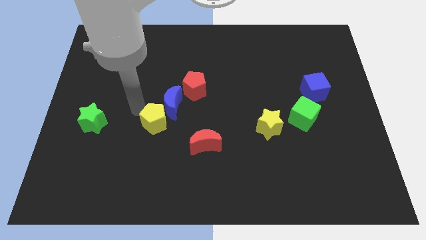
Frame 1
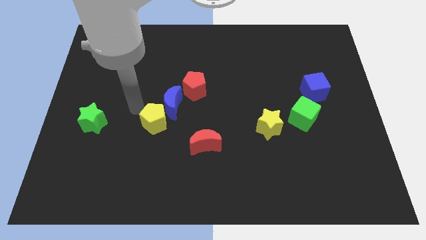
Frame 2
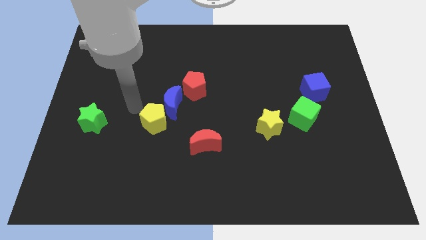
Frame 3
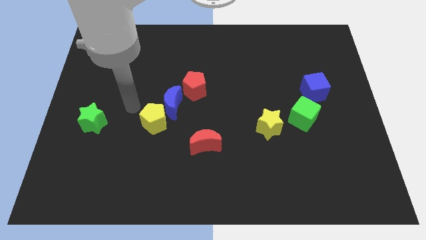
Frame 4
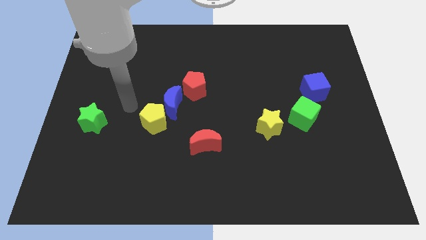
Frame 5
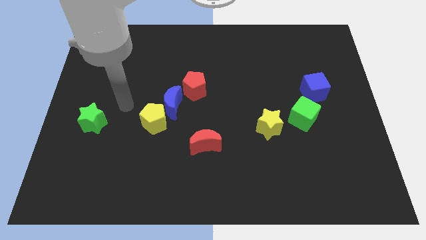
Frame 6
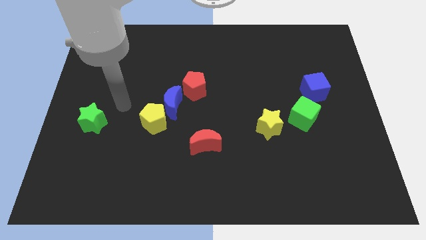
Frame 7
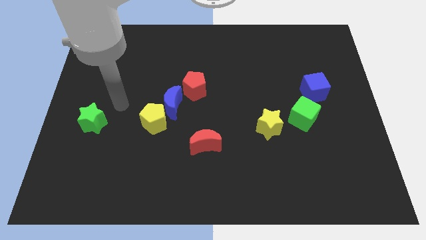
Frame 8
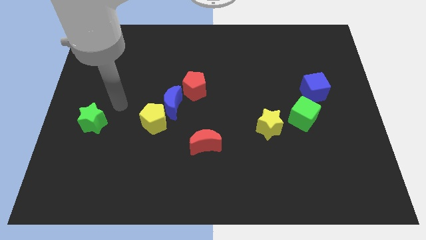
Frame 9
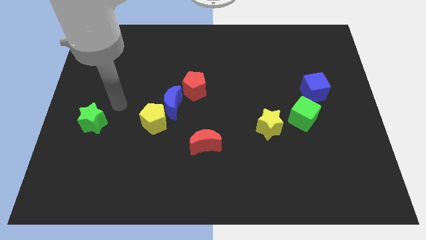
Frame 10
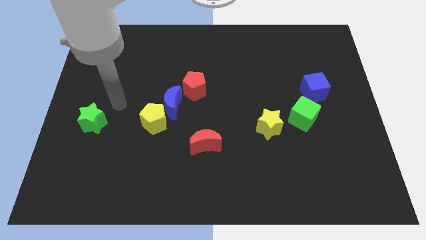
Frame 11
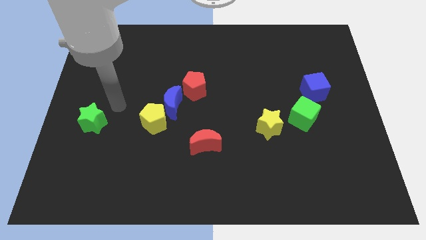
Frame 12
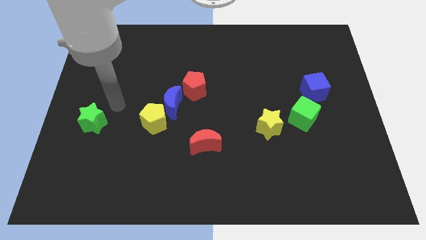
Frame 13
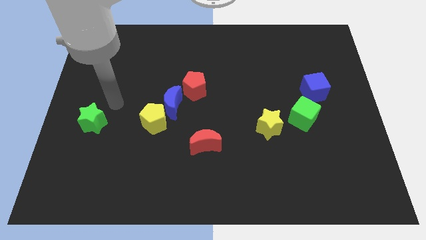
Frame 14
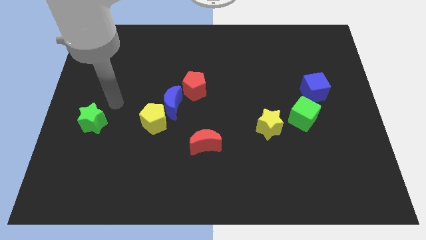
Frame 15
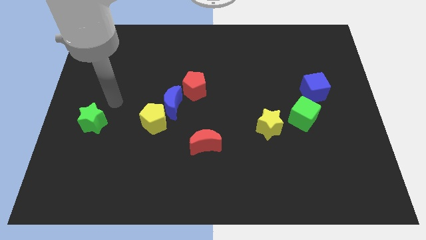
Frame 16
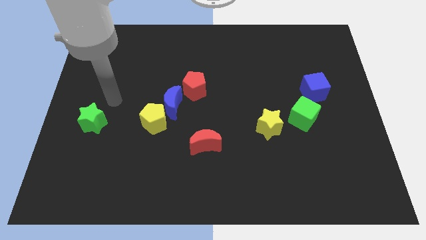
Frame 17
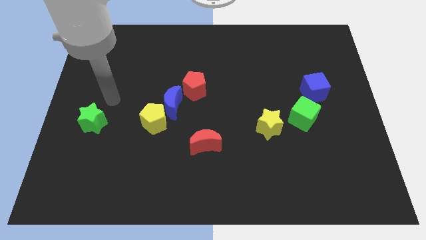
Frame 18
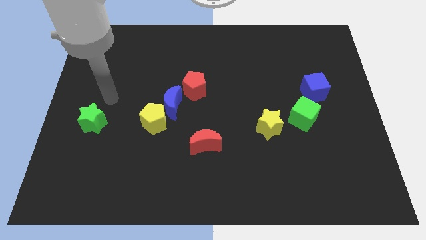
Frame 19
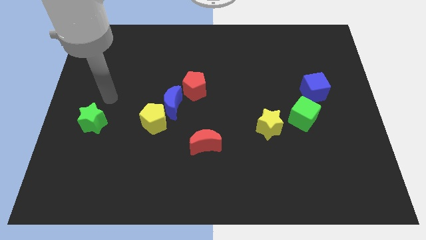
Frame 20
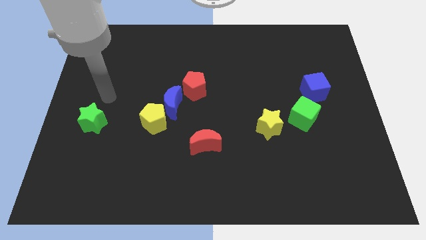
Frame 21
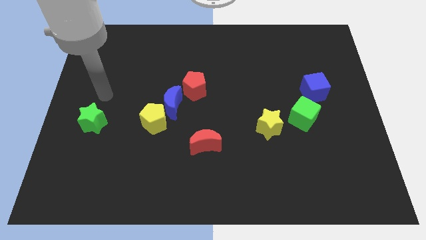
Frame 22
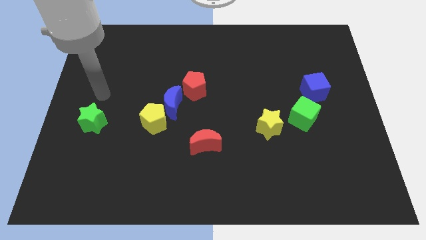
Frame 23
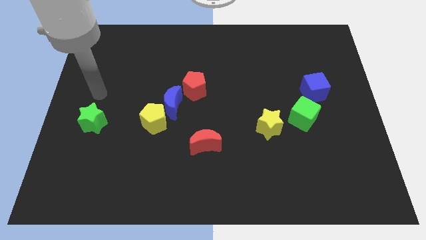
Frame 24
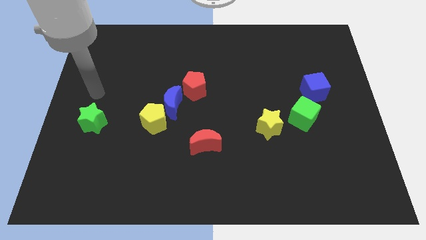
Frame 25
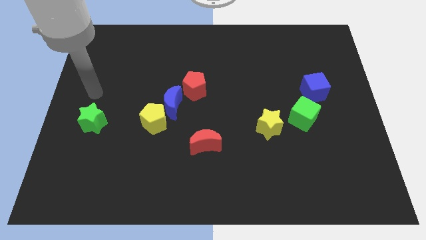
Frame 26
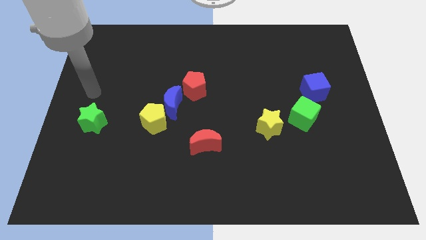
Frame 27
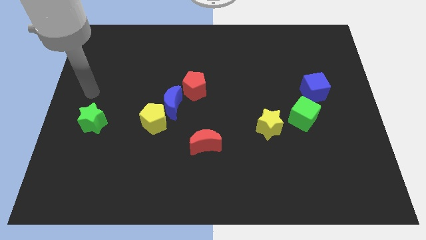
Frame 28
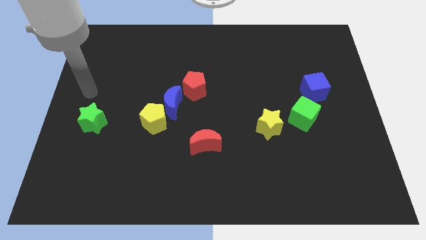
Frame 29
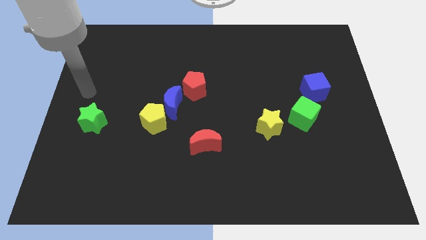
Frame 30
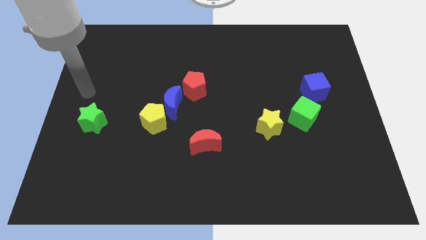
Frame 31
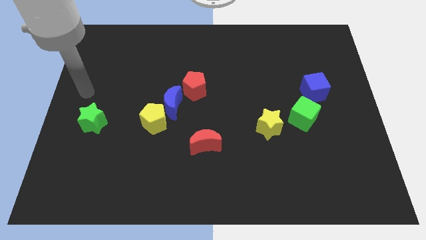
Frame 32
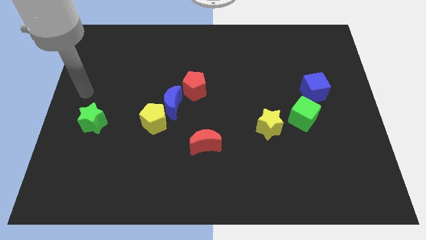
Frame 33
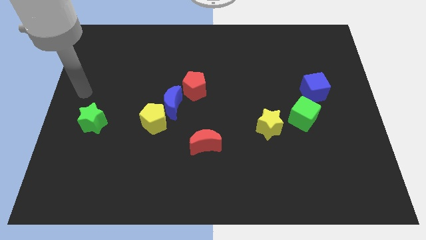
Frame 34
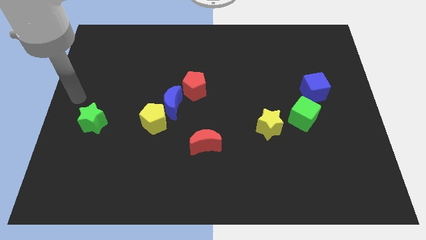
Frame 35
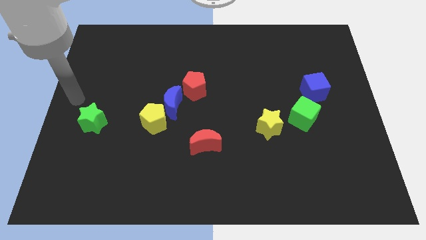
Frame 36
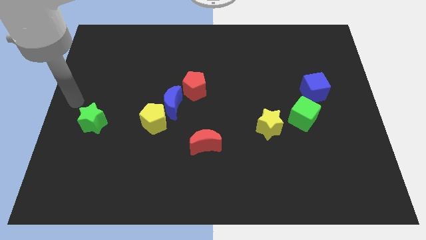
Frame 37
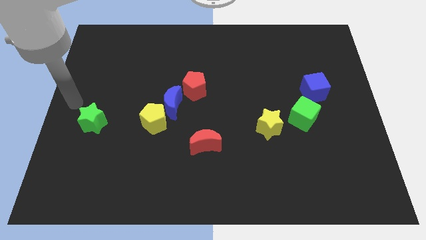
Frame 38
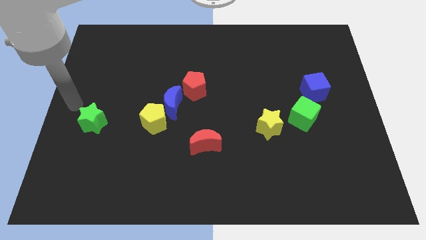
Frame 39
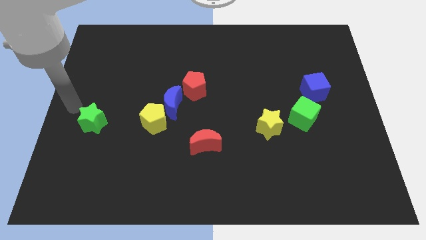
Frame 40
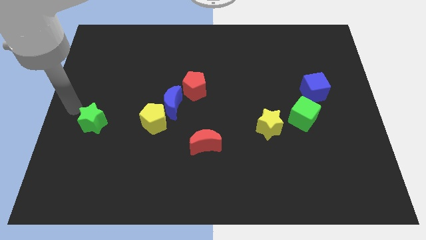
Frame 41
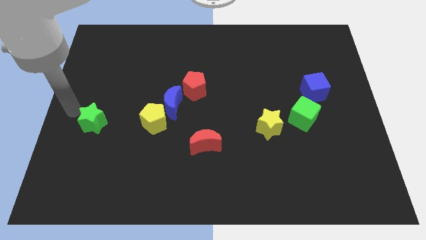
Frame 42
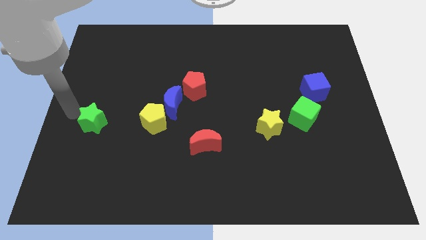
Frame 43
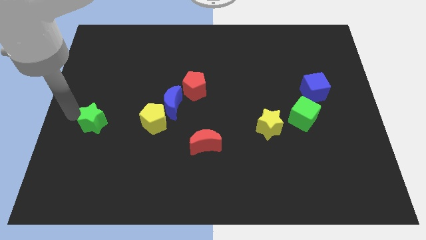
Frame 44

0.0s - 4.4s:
point your hand at the left of the green star

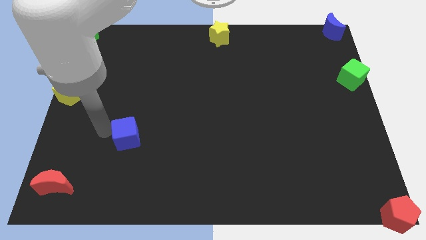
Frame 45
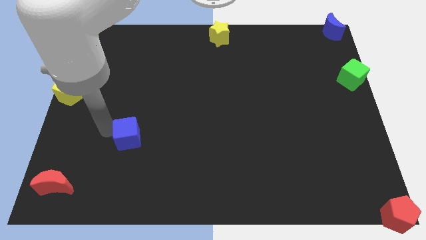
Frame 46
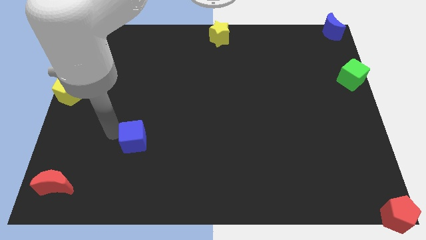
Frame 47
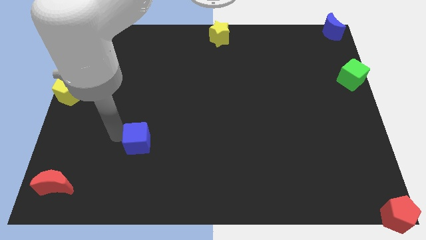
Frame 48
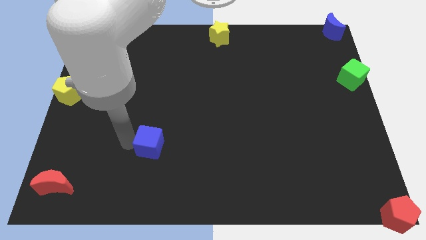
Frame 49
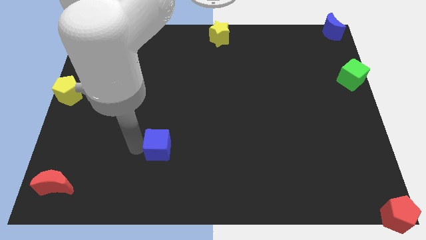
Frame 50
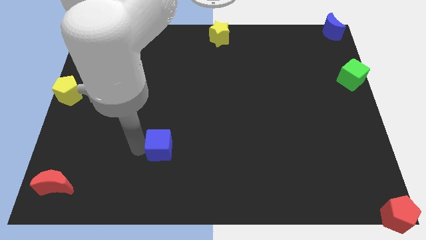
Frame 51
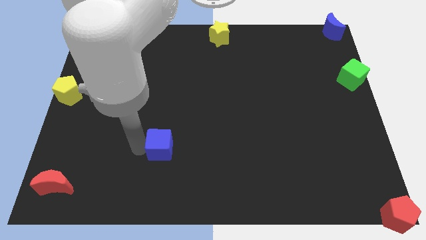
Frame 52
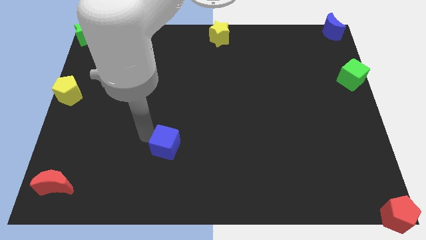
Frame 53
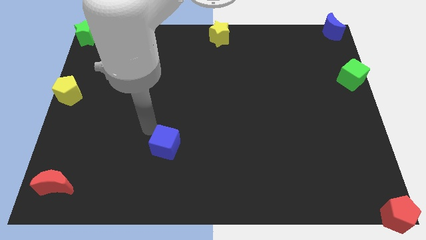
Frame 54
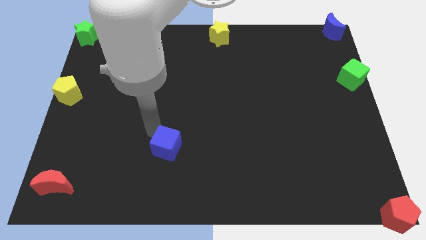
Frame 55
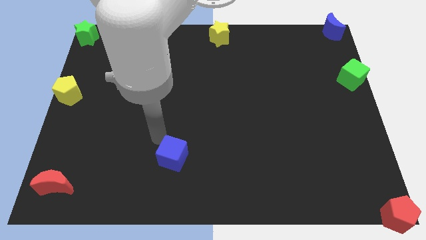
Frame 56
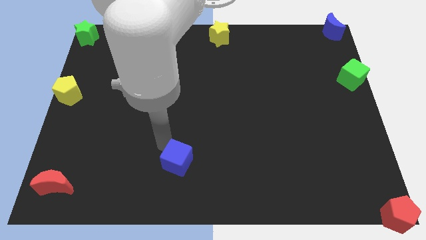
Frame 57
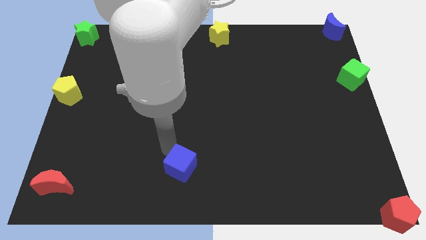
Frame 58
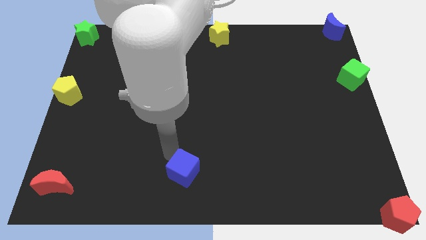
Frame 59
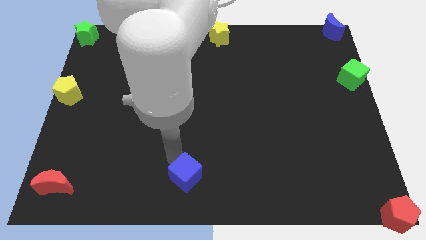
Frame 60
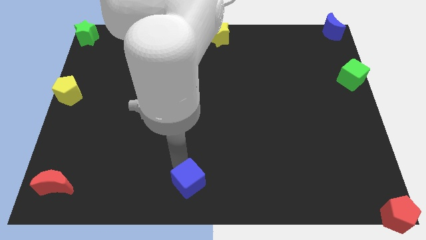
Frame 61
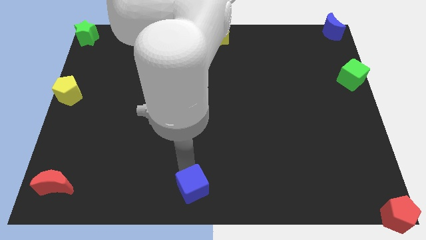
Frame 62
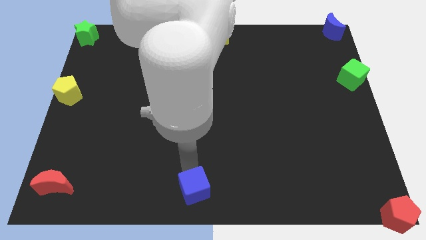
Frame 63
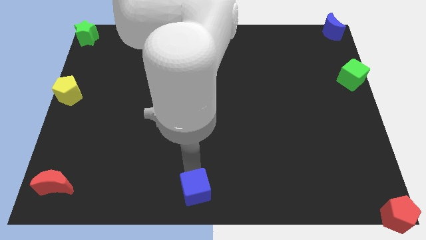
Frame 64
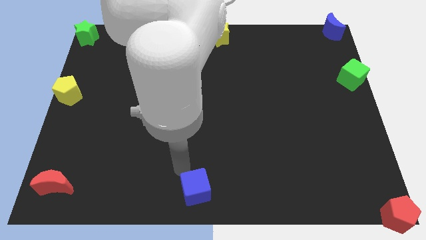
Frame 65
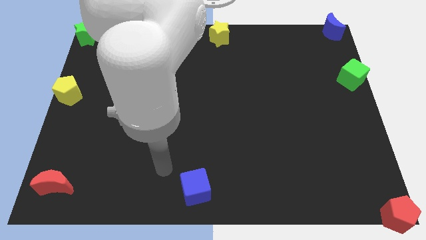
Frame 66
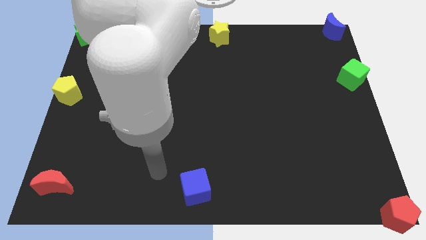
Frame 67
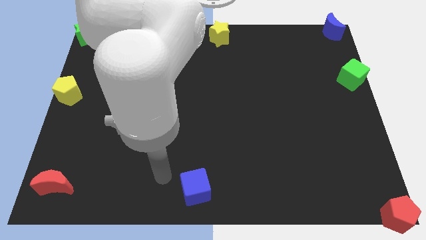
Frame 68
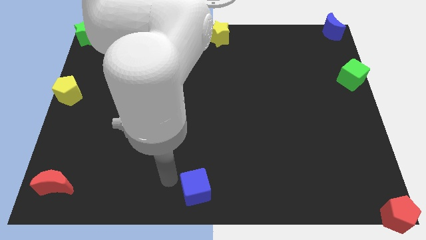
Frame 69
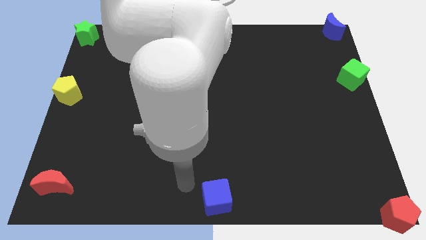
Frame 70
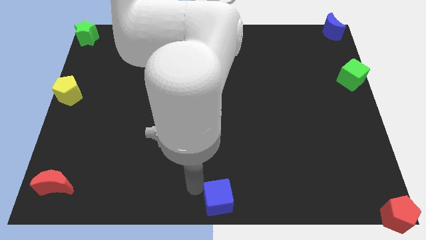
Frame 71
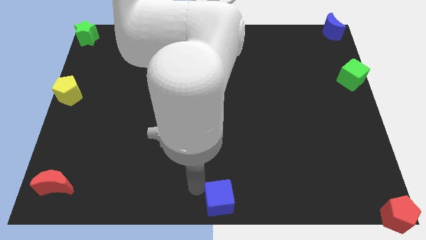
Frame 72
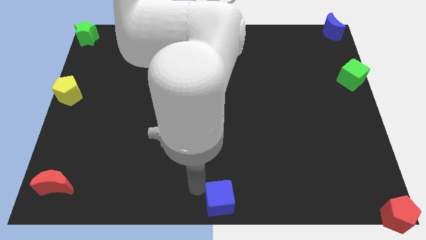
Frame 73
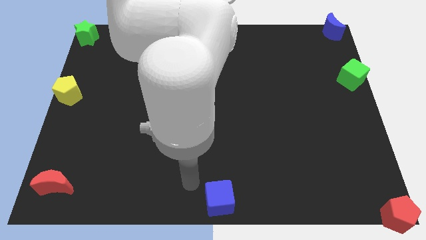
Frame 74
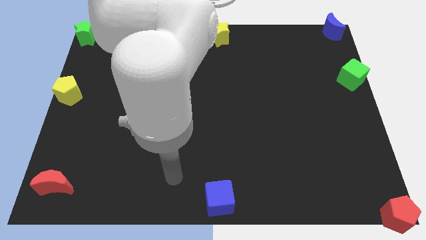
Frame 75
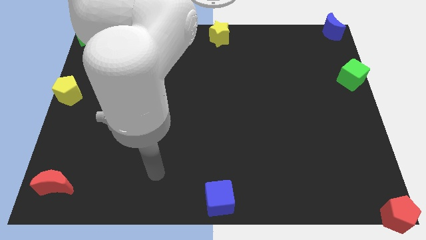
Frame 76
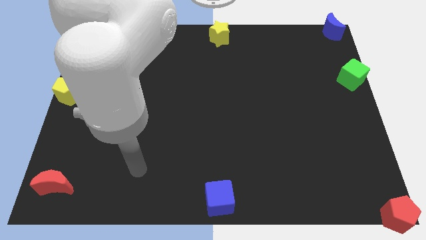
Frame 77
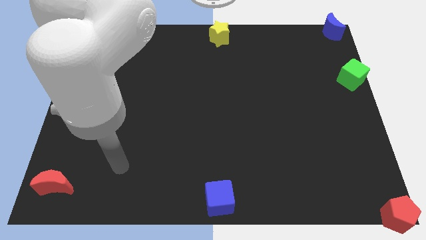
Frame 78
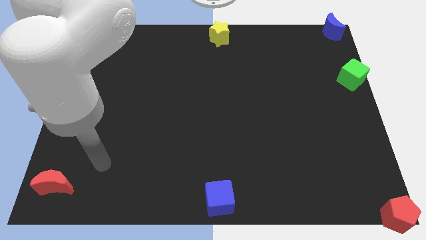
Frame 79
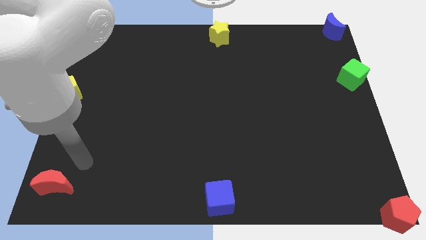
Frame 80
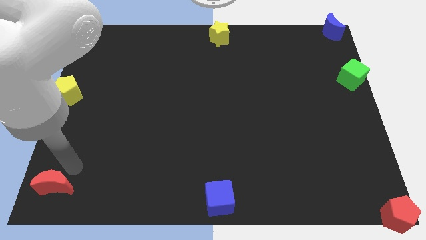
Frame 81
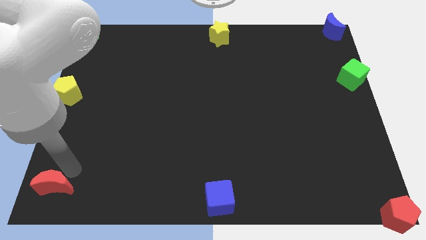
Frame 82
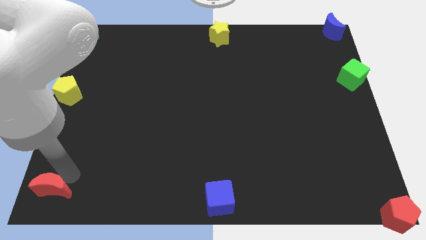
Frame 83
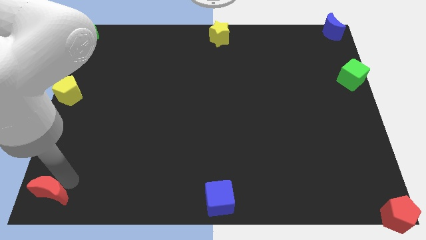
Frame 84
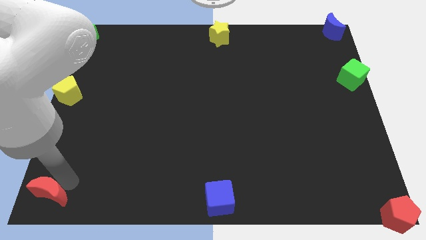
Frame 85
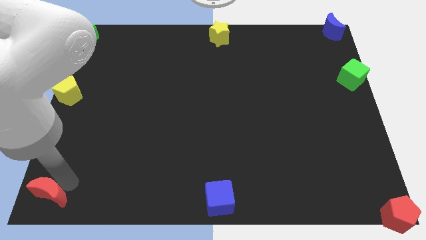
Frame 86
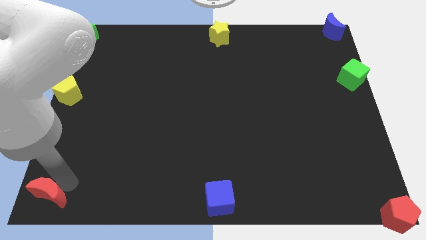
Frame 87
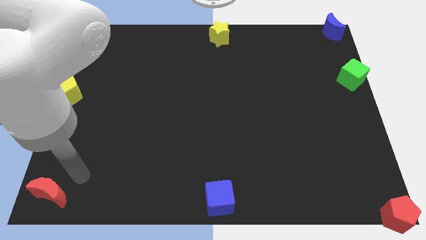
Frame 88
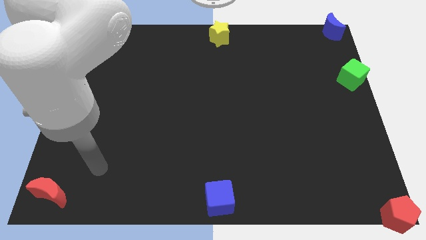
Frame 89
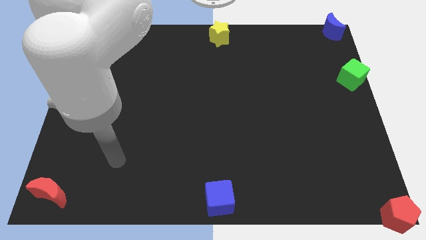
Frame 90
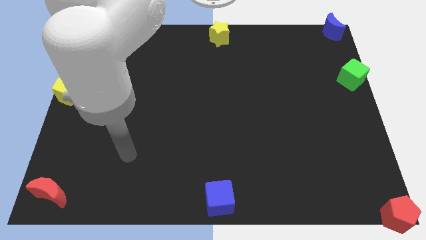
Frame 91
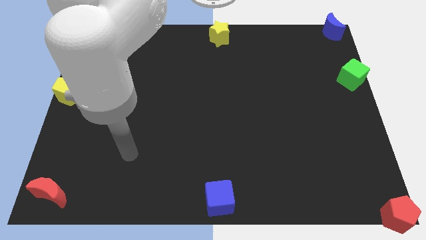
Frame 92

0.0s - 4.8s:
place the blue cube at the bottom center of the board

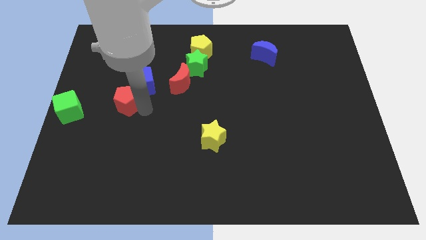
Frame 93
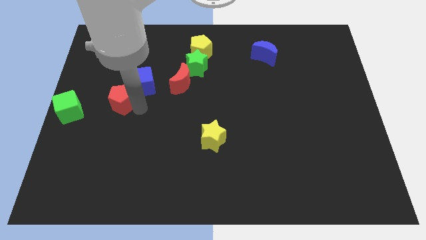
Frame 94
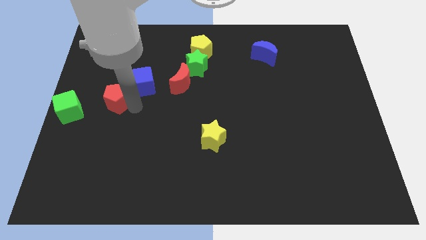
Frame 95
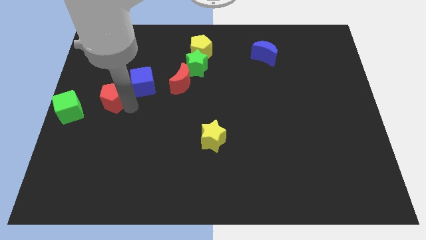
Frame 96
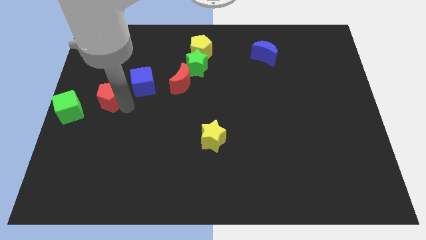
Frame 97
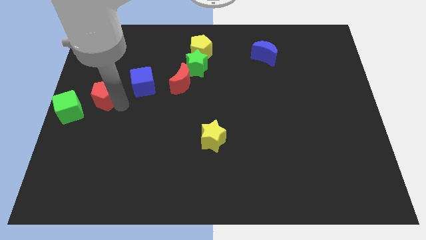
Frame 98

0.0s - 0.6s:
place the red pentagon in between the green cube and blue cube
